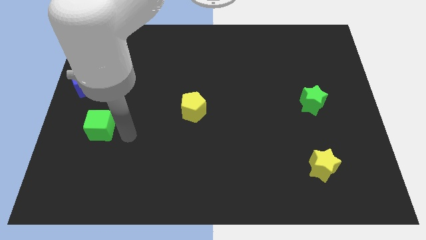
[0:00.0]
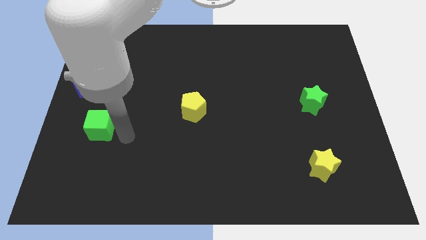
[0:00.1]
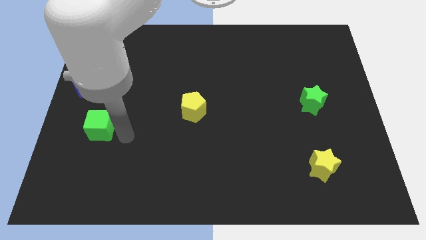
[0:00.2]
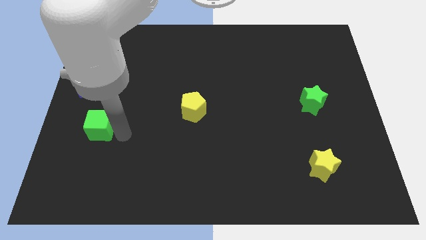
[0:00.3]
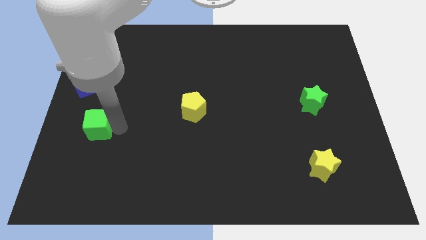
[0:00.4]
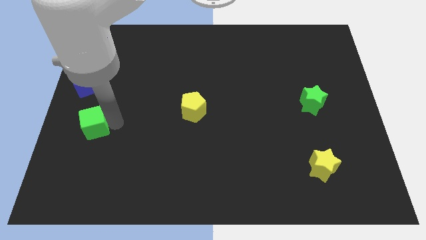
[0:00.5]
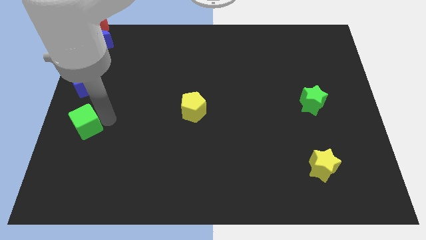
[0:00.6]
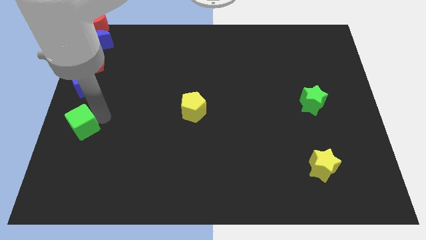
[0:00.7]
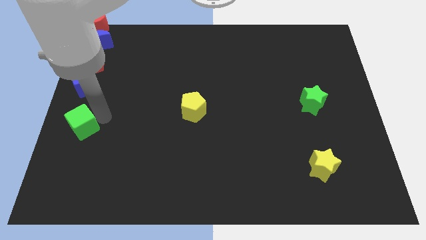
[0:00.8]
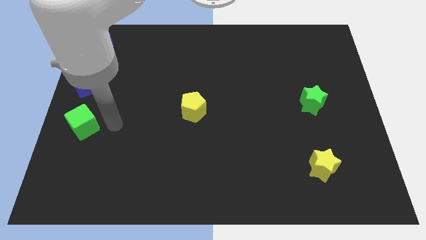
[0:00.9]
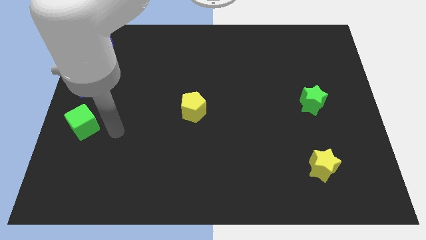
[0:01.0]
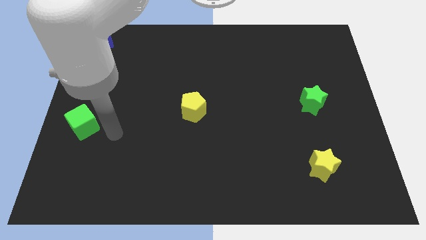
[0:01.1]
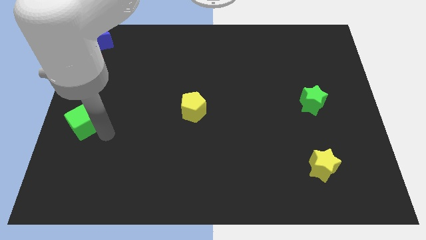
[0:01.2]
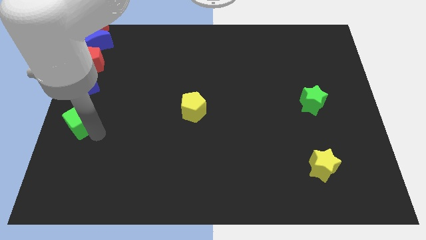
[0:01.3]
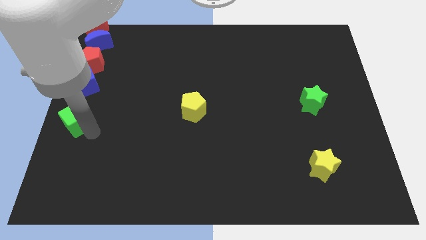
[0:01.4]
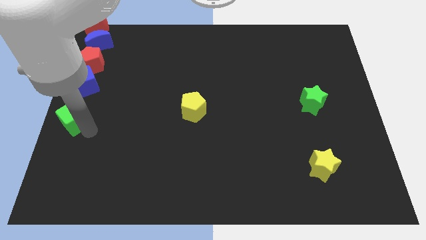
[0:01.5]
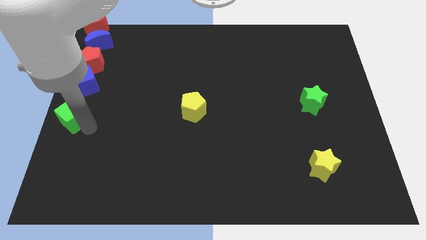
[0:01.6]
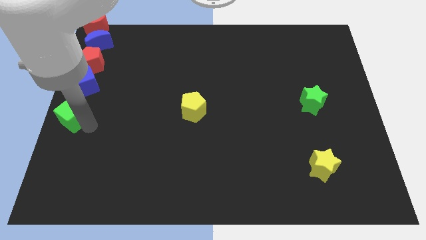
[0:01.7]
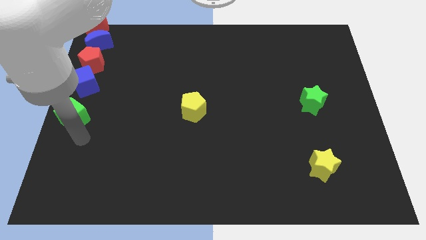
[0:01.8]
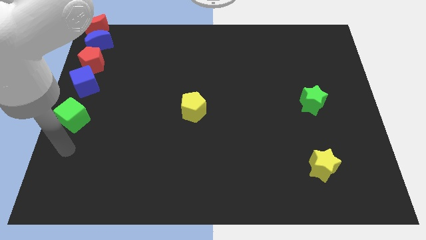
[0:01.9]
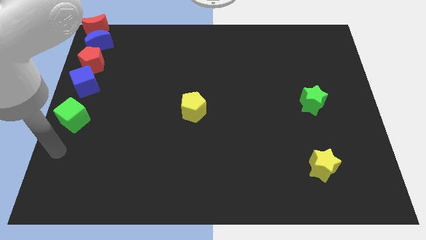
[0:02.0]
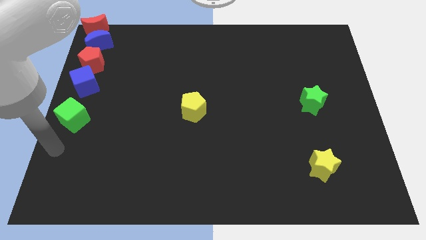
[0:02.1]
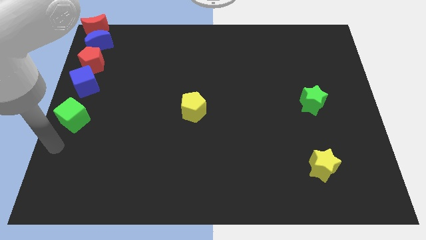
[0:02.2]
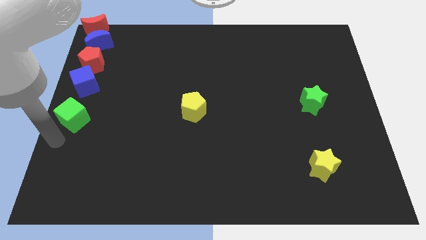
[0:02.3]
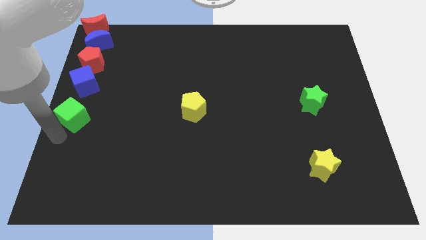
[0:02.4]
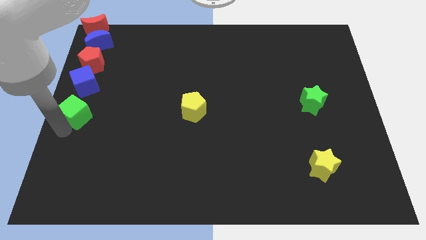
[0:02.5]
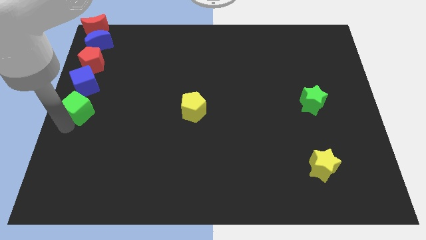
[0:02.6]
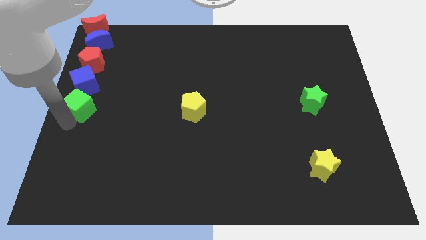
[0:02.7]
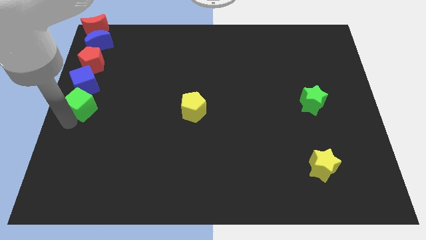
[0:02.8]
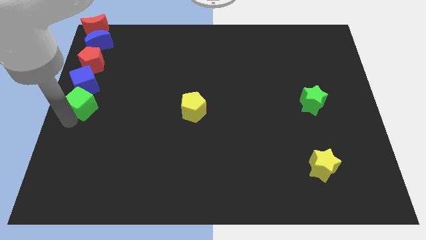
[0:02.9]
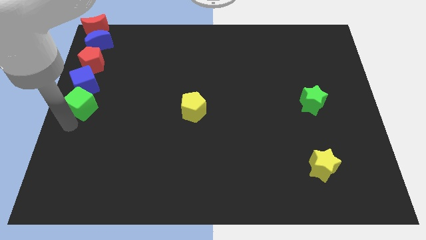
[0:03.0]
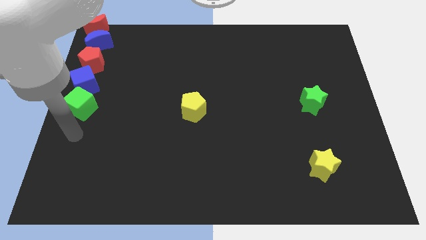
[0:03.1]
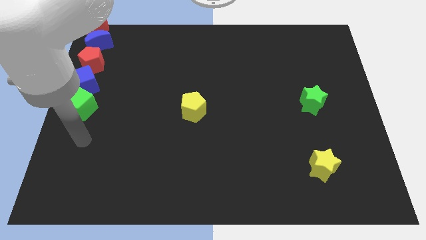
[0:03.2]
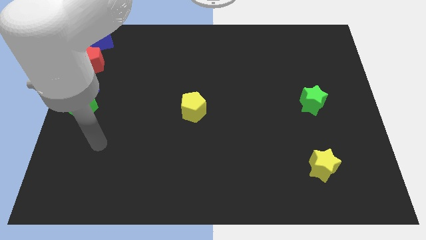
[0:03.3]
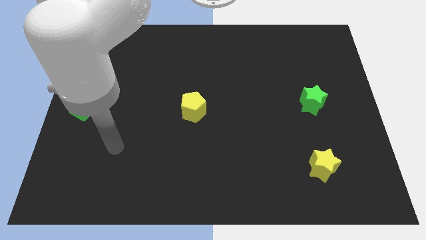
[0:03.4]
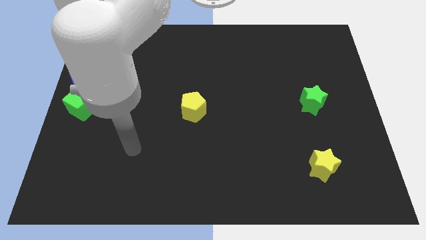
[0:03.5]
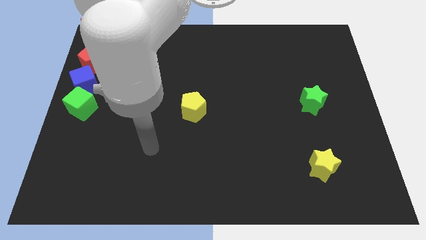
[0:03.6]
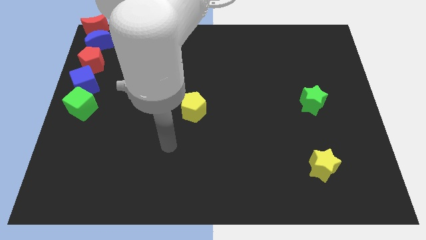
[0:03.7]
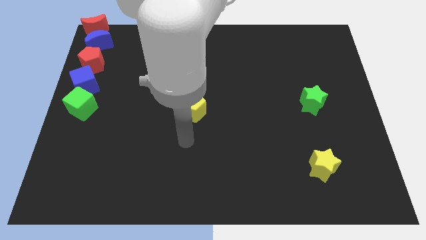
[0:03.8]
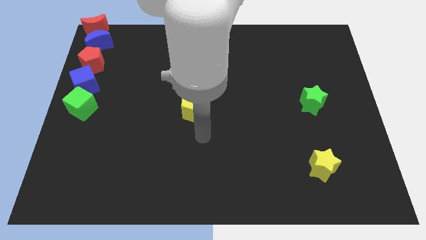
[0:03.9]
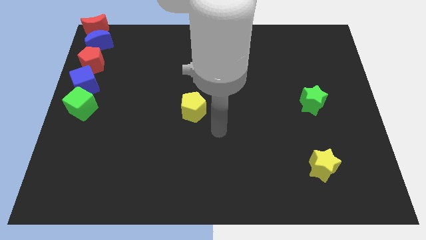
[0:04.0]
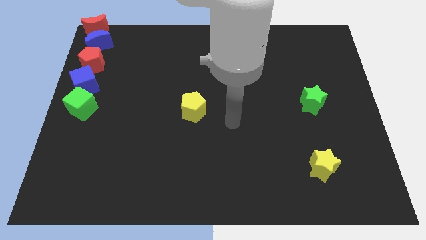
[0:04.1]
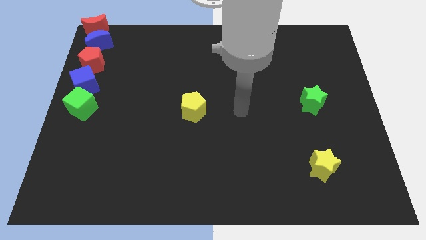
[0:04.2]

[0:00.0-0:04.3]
push green cube down to the blue cube

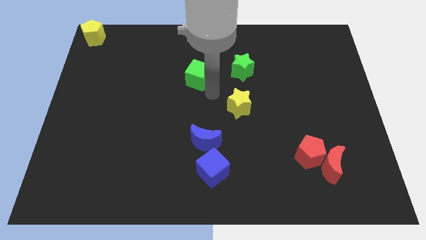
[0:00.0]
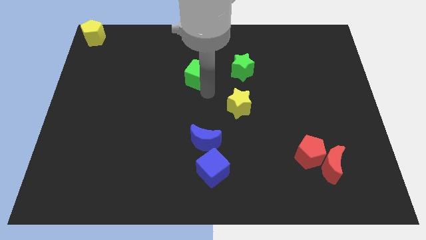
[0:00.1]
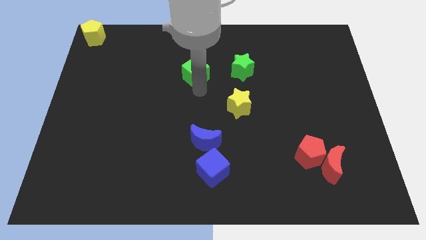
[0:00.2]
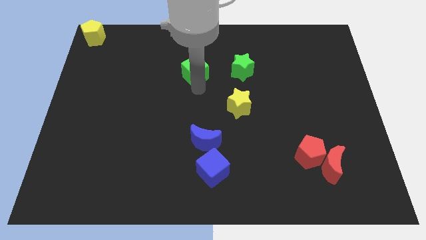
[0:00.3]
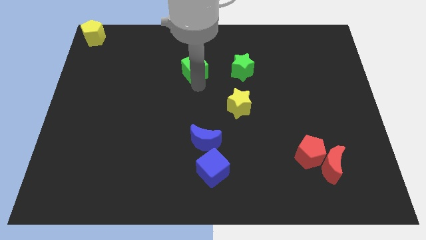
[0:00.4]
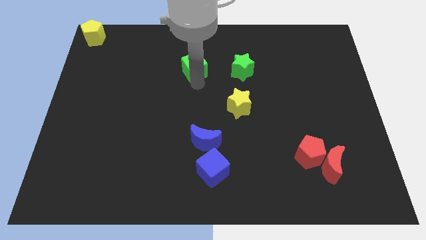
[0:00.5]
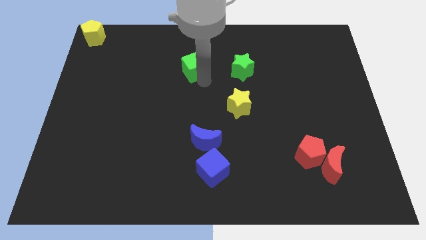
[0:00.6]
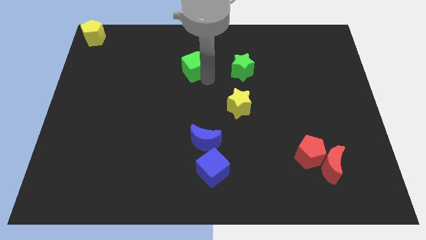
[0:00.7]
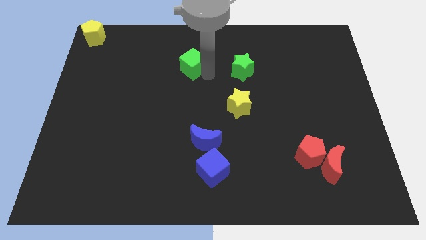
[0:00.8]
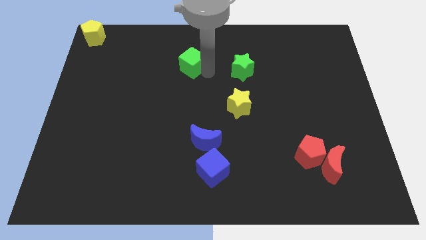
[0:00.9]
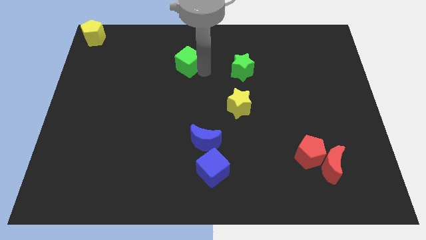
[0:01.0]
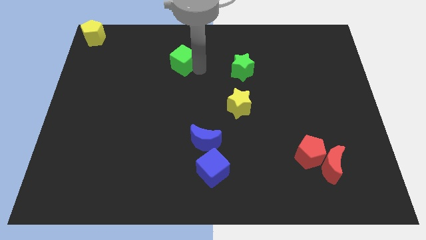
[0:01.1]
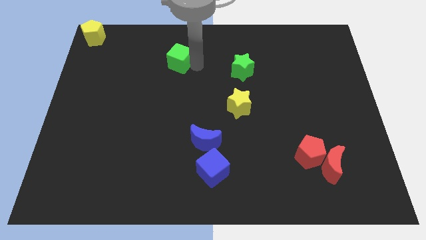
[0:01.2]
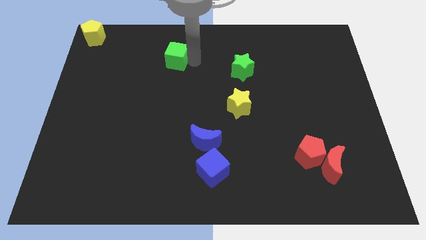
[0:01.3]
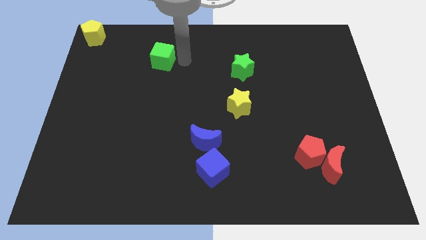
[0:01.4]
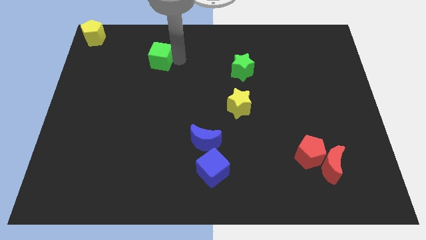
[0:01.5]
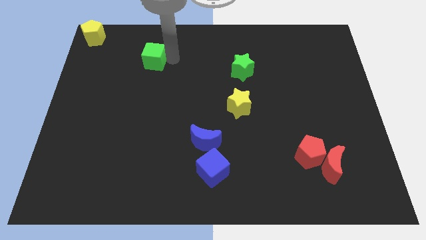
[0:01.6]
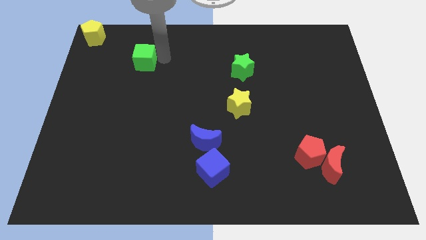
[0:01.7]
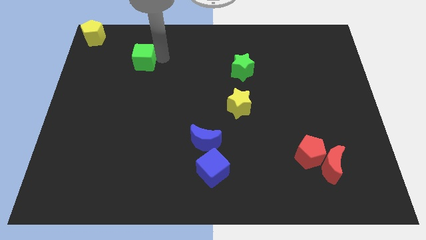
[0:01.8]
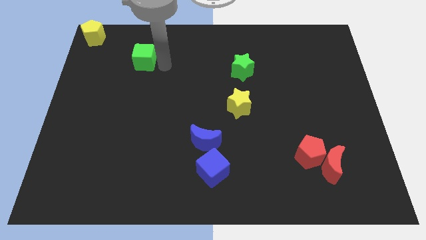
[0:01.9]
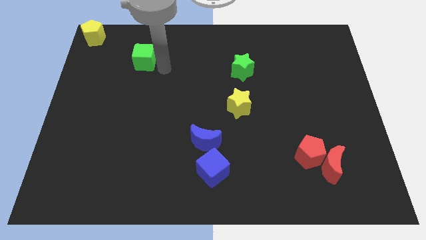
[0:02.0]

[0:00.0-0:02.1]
move green cube diagonal to yellow pentagon

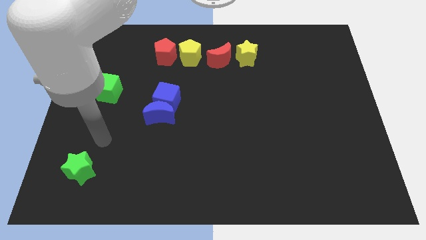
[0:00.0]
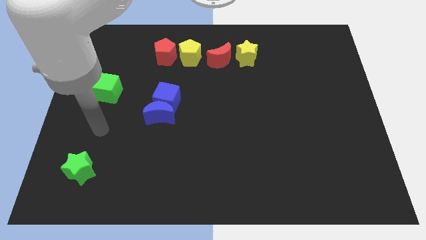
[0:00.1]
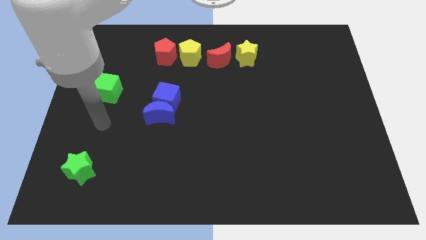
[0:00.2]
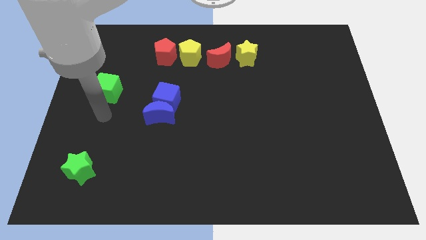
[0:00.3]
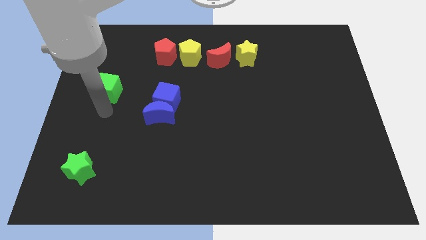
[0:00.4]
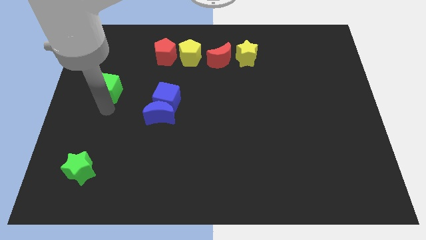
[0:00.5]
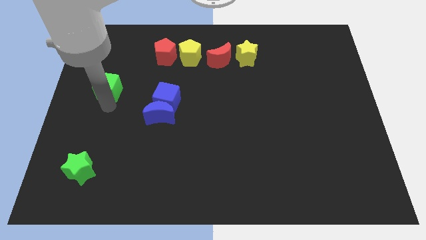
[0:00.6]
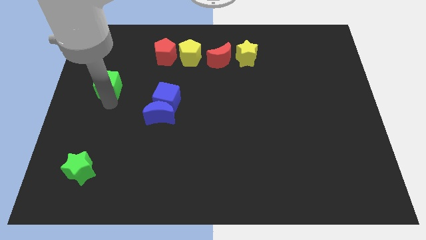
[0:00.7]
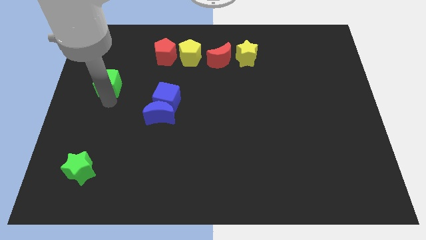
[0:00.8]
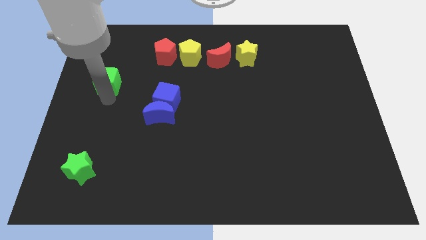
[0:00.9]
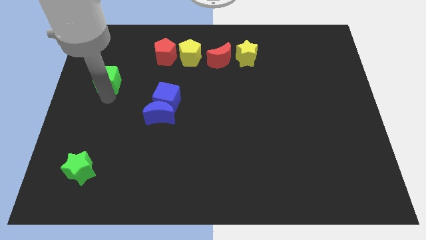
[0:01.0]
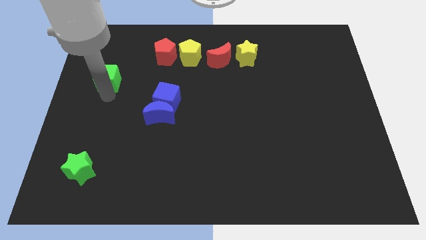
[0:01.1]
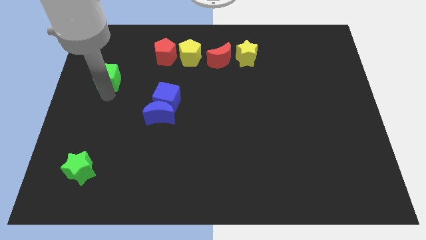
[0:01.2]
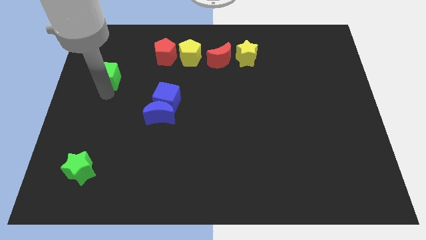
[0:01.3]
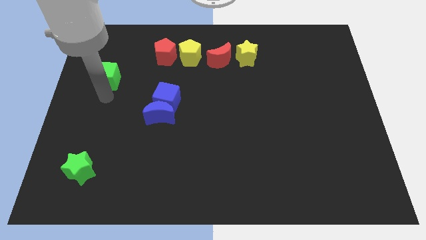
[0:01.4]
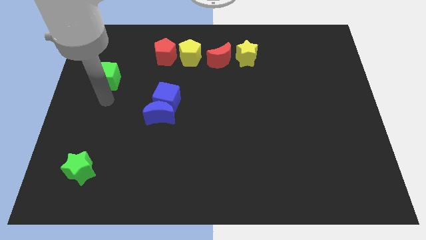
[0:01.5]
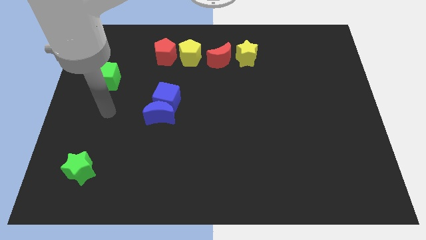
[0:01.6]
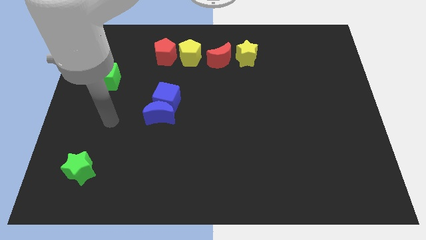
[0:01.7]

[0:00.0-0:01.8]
move the green cube towards up a bit

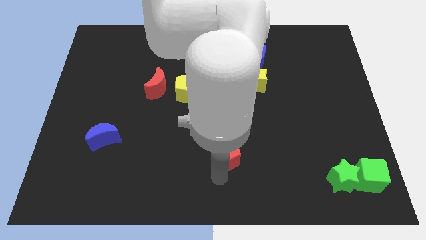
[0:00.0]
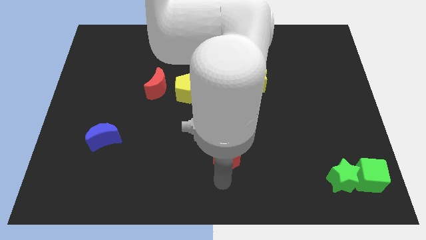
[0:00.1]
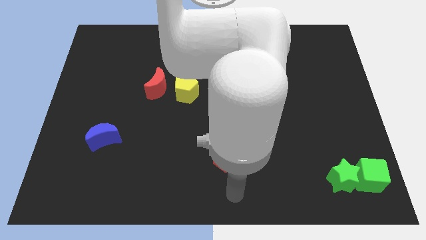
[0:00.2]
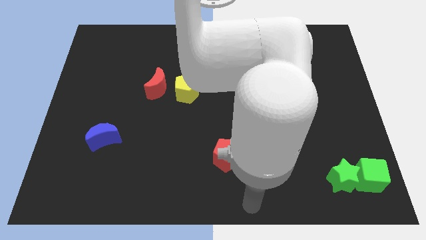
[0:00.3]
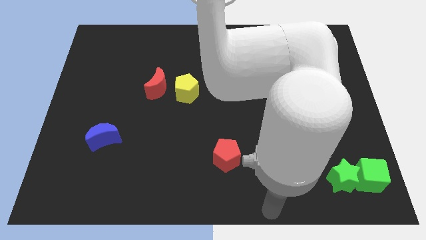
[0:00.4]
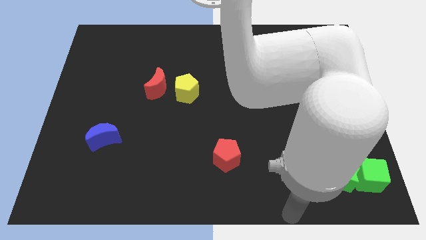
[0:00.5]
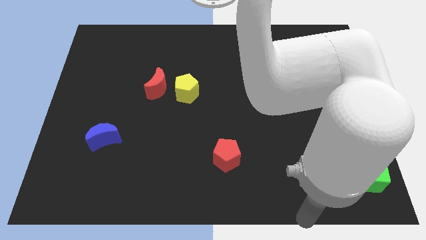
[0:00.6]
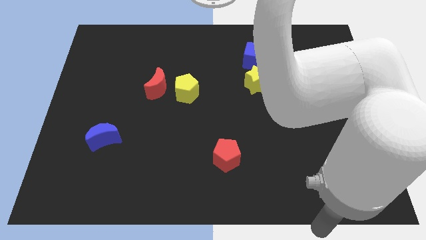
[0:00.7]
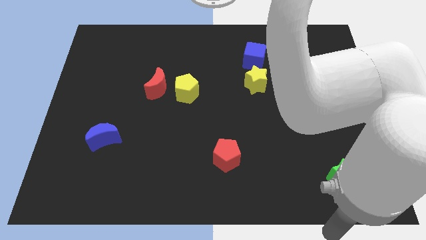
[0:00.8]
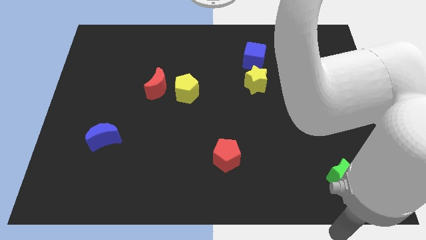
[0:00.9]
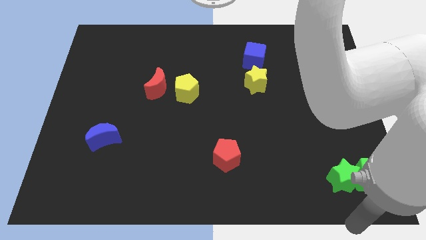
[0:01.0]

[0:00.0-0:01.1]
move your arm away from red pentagon
